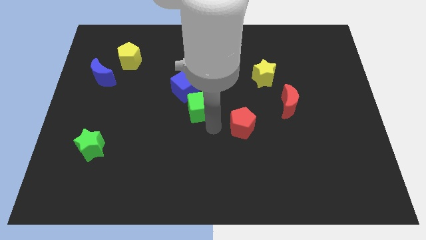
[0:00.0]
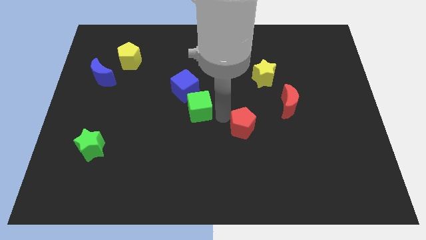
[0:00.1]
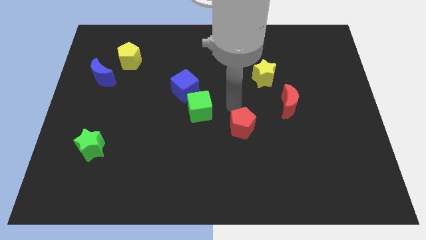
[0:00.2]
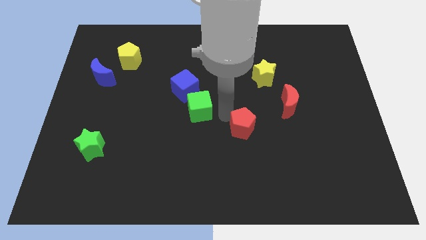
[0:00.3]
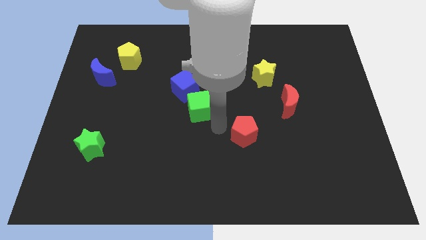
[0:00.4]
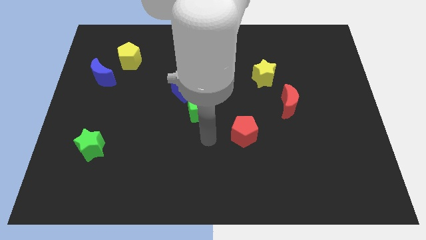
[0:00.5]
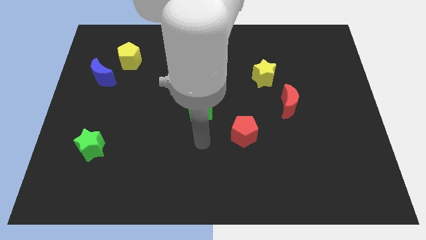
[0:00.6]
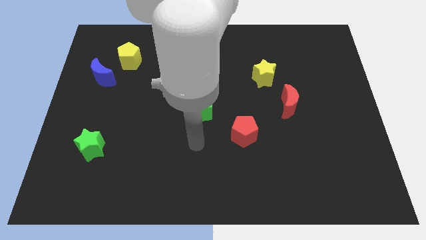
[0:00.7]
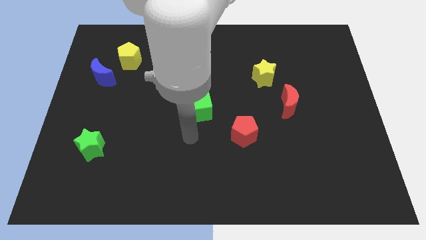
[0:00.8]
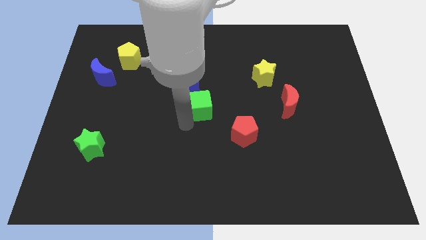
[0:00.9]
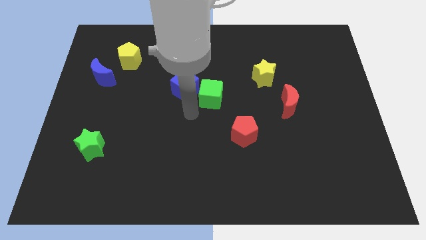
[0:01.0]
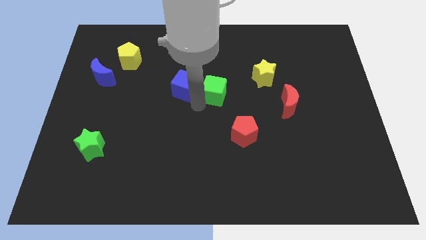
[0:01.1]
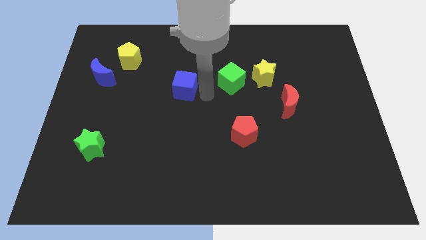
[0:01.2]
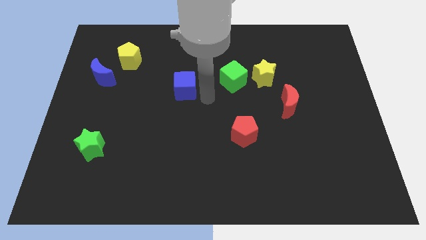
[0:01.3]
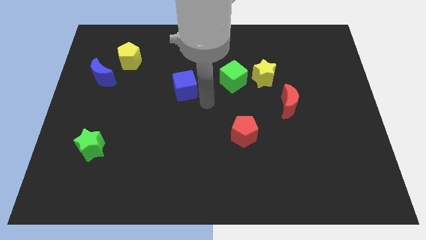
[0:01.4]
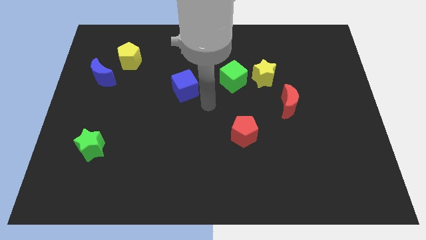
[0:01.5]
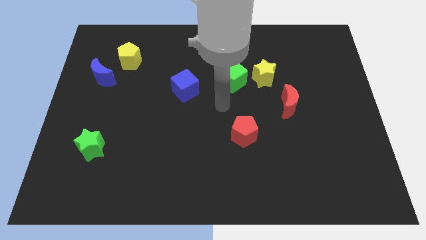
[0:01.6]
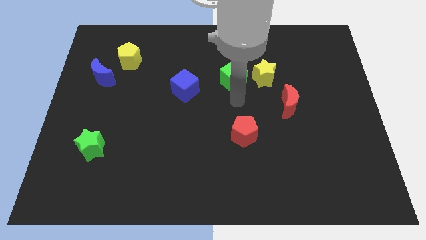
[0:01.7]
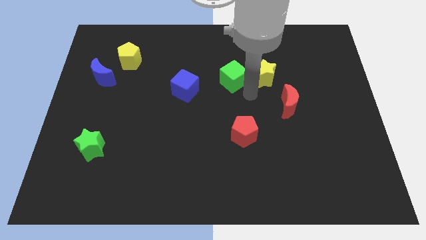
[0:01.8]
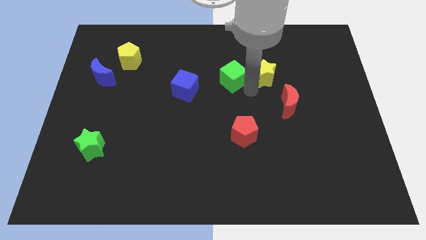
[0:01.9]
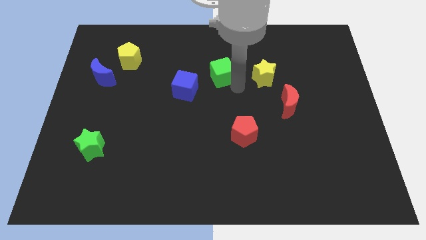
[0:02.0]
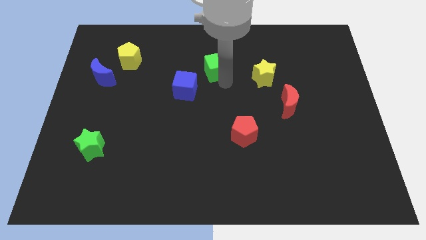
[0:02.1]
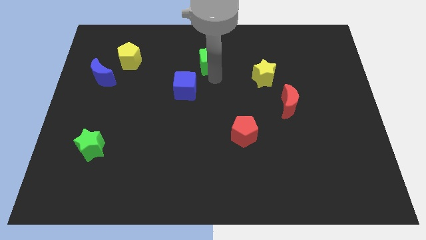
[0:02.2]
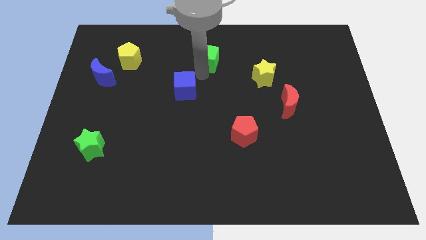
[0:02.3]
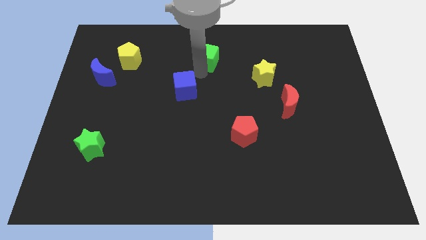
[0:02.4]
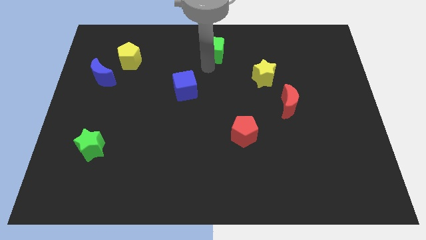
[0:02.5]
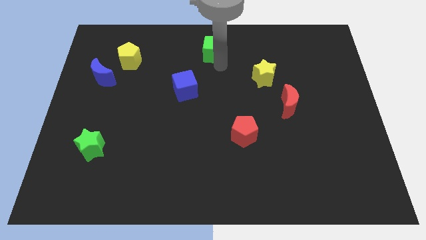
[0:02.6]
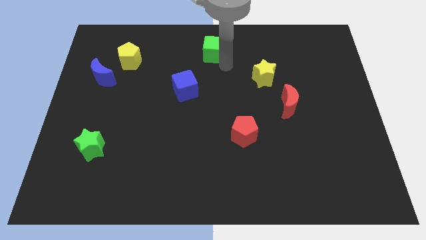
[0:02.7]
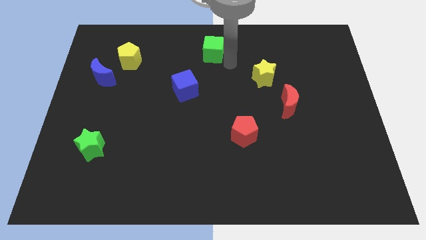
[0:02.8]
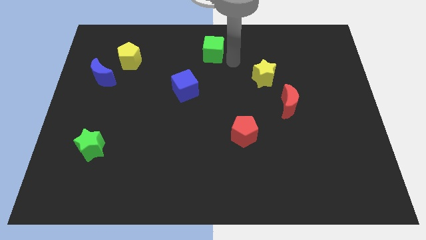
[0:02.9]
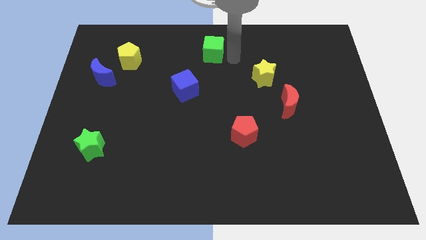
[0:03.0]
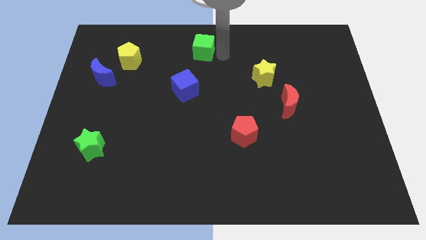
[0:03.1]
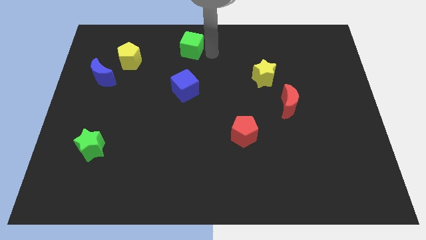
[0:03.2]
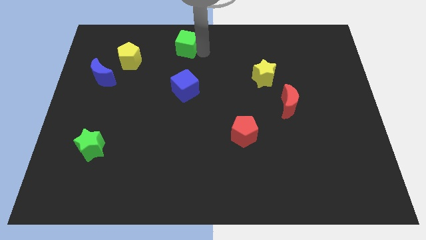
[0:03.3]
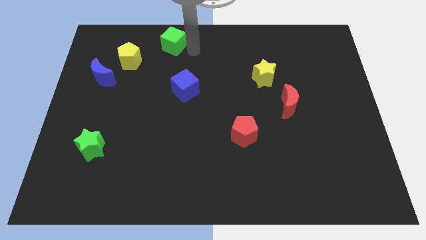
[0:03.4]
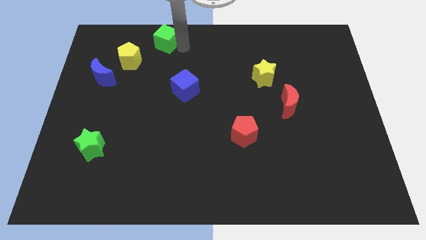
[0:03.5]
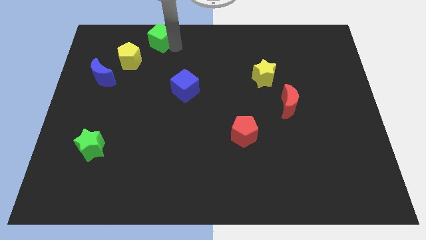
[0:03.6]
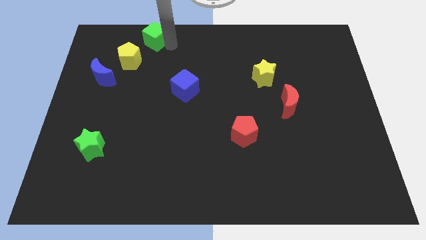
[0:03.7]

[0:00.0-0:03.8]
move the green cube above the blue cube on the top left side

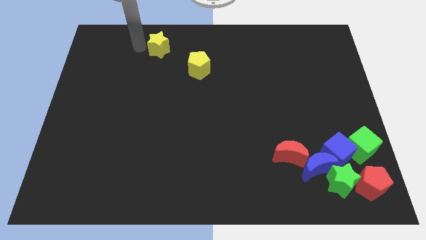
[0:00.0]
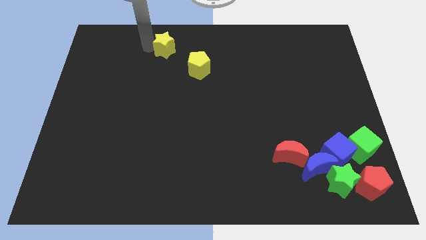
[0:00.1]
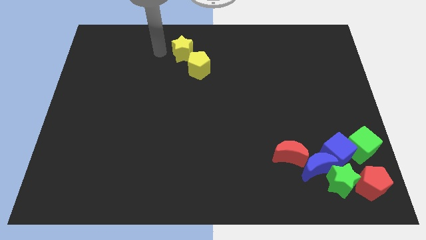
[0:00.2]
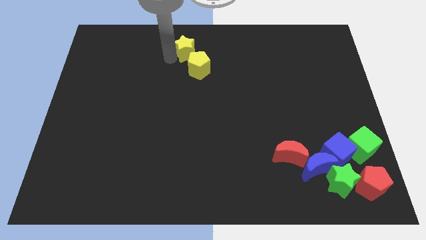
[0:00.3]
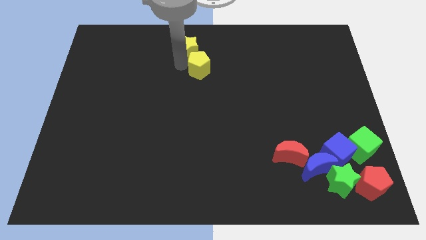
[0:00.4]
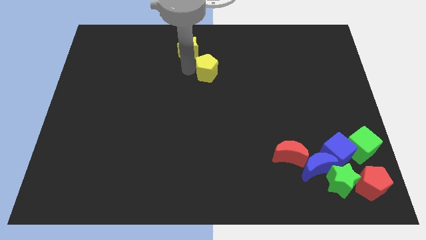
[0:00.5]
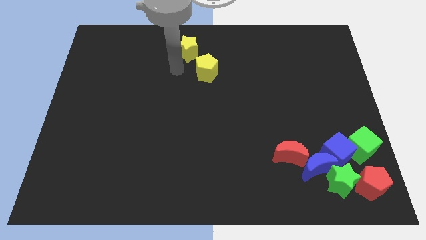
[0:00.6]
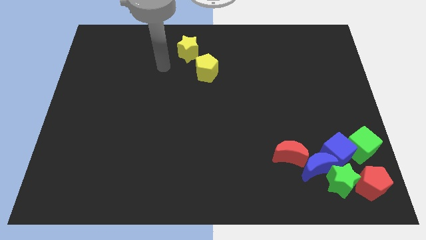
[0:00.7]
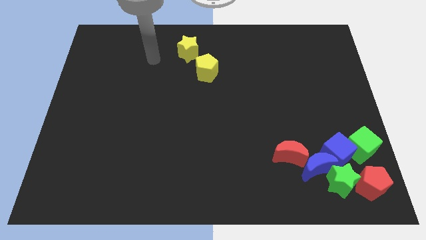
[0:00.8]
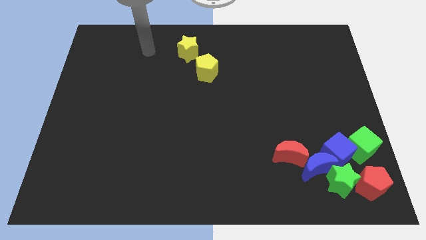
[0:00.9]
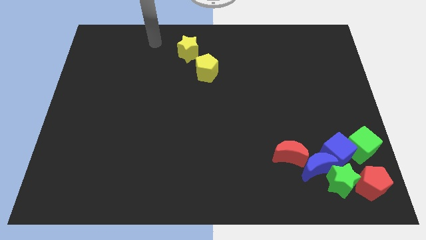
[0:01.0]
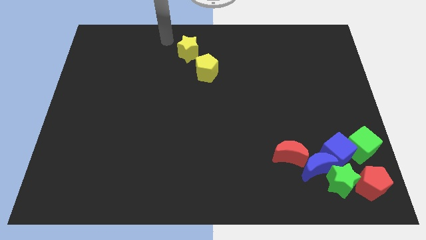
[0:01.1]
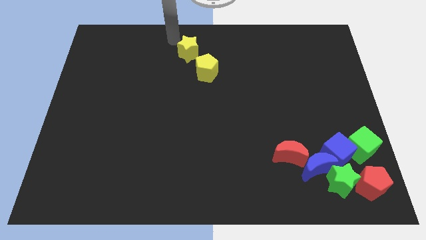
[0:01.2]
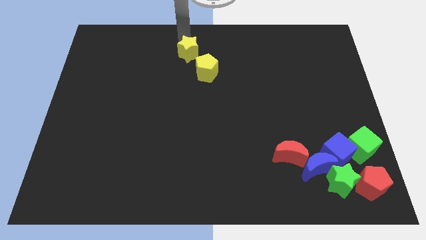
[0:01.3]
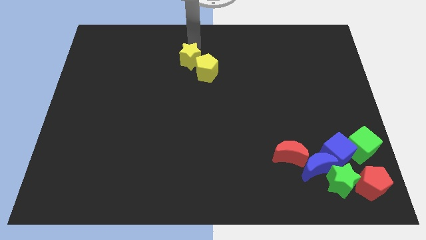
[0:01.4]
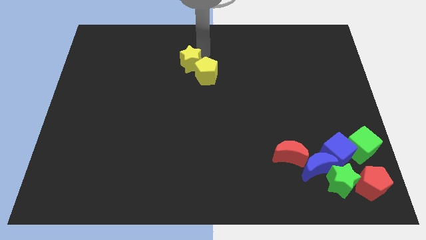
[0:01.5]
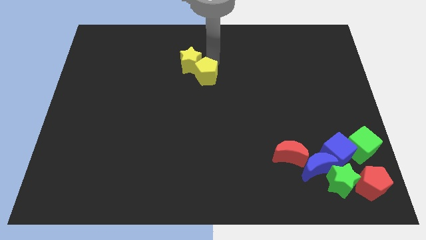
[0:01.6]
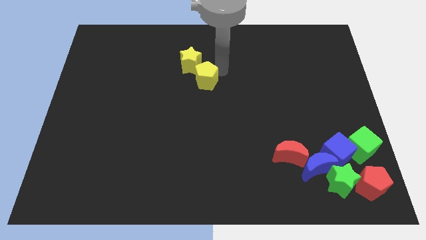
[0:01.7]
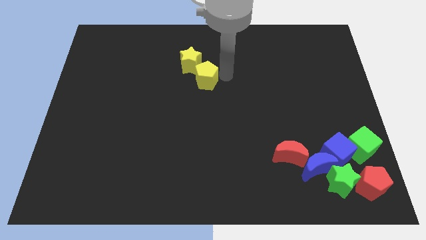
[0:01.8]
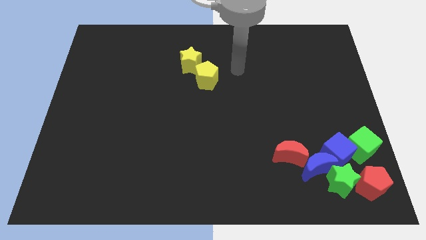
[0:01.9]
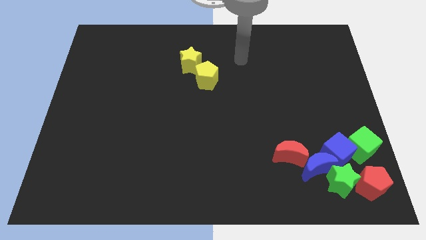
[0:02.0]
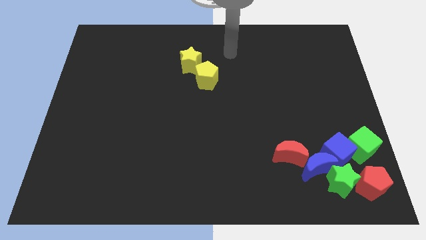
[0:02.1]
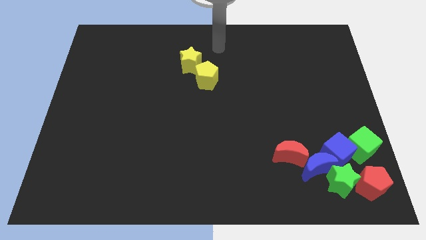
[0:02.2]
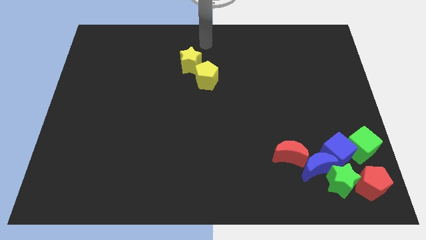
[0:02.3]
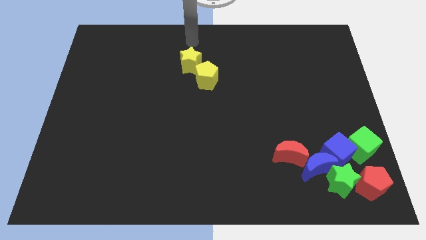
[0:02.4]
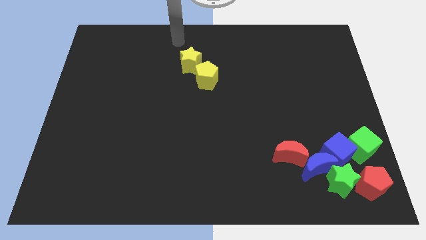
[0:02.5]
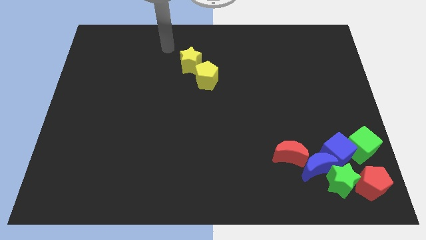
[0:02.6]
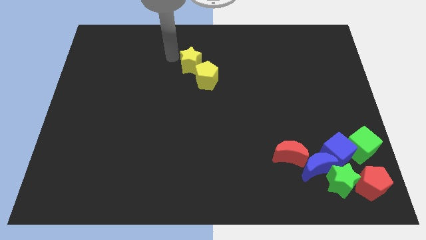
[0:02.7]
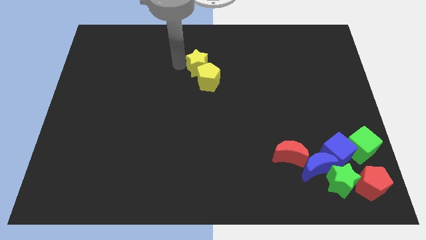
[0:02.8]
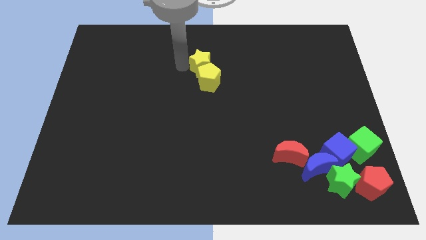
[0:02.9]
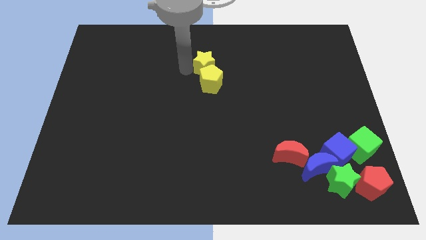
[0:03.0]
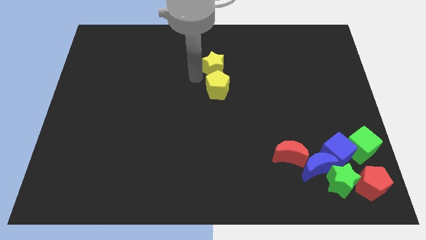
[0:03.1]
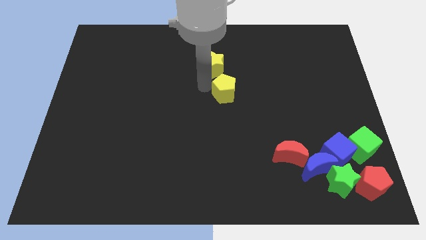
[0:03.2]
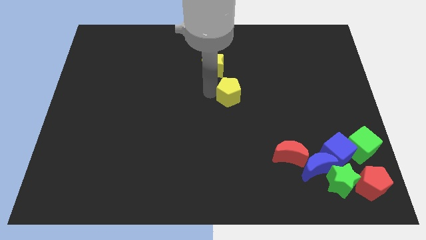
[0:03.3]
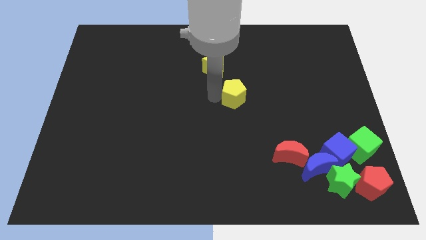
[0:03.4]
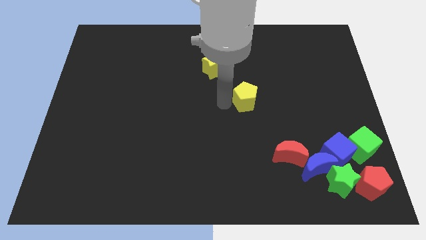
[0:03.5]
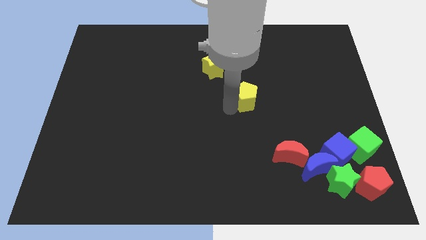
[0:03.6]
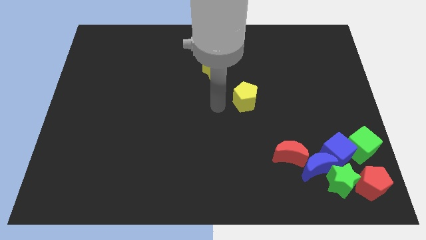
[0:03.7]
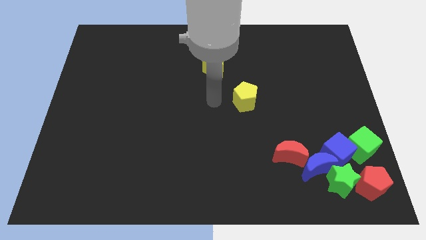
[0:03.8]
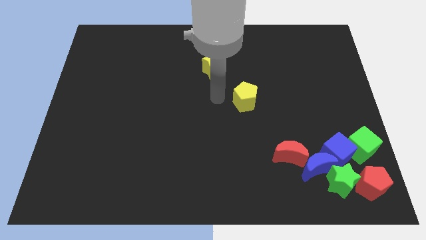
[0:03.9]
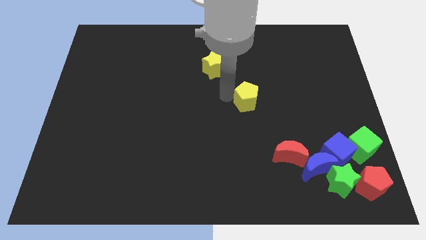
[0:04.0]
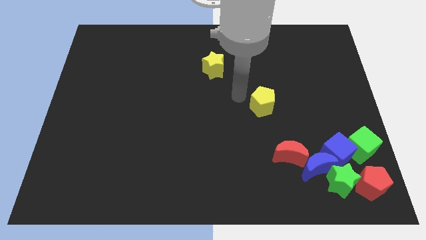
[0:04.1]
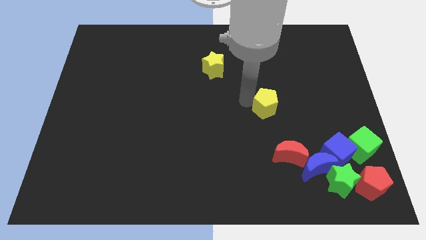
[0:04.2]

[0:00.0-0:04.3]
push the yellow blocks towards the group of blocks

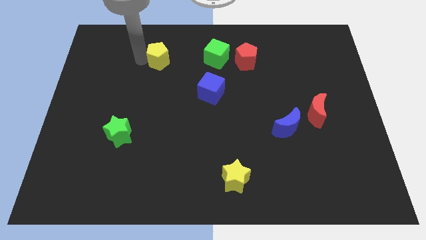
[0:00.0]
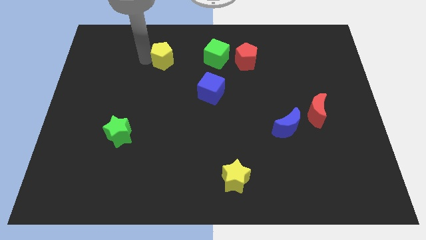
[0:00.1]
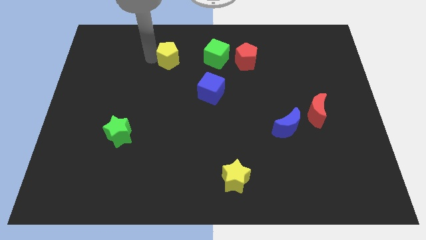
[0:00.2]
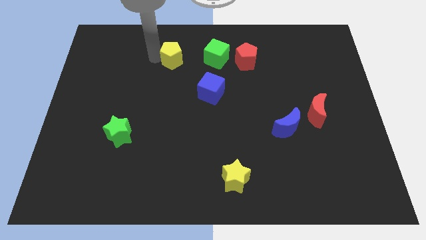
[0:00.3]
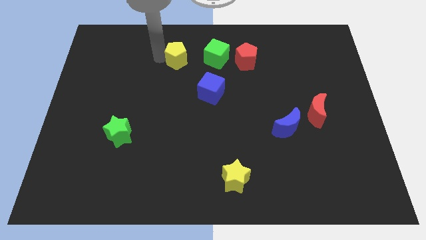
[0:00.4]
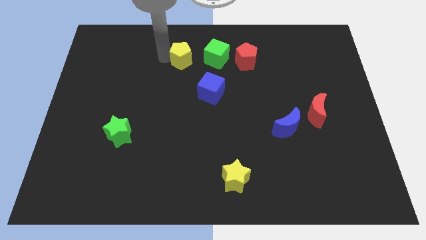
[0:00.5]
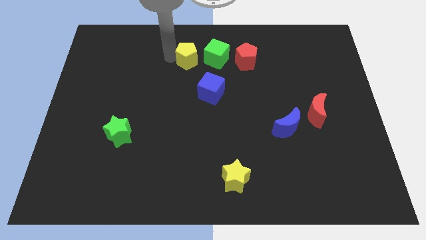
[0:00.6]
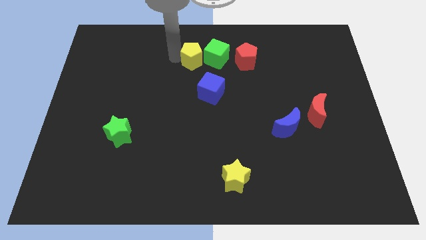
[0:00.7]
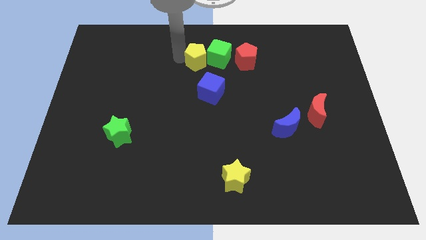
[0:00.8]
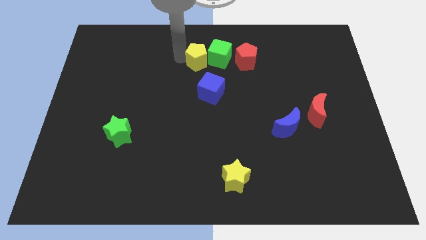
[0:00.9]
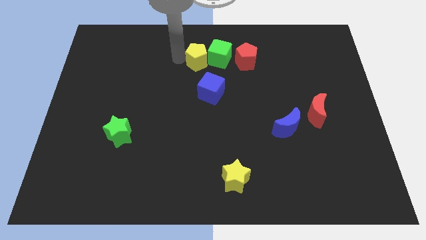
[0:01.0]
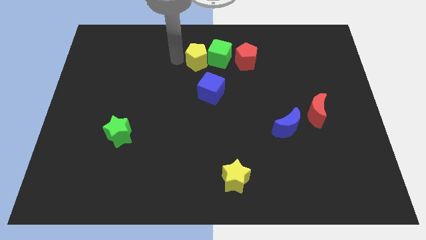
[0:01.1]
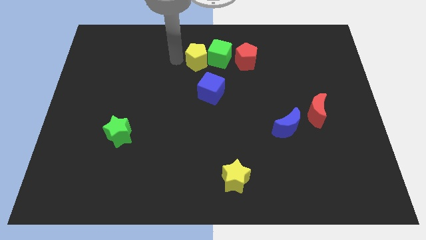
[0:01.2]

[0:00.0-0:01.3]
place yellow pentagon to the left of green cube
